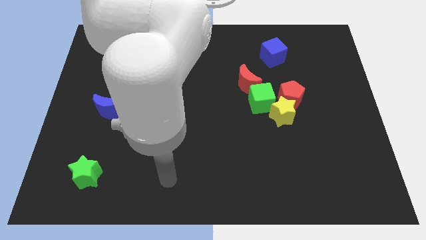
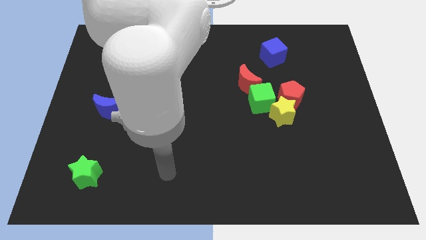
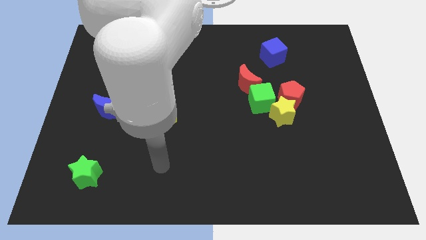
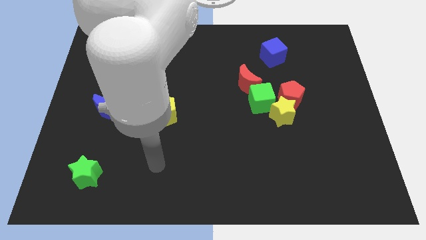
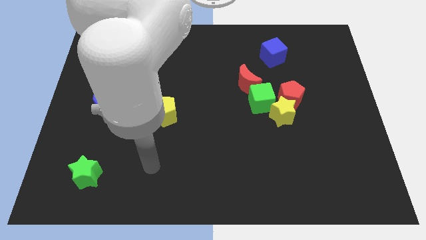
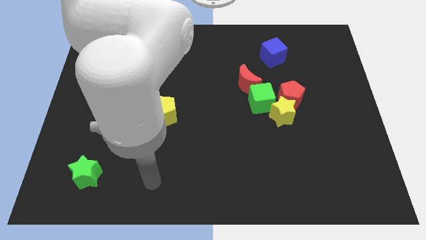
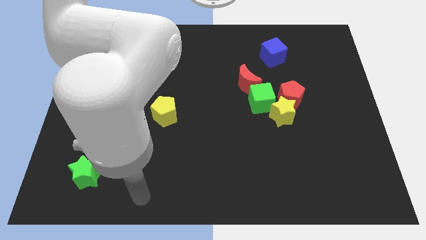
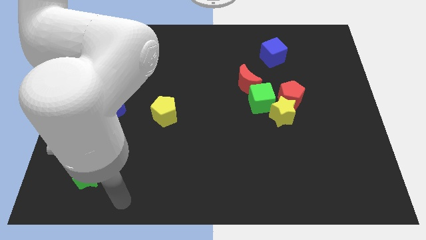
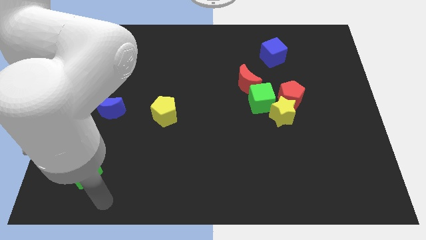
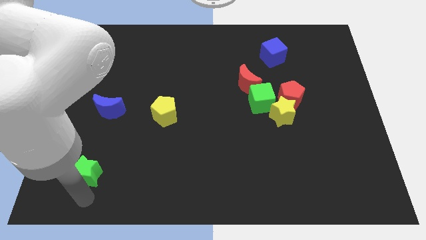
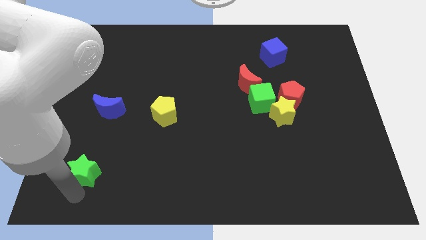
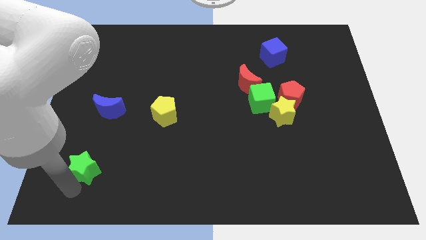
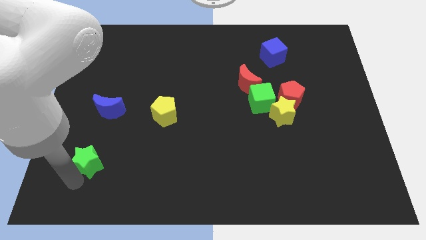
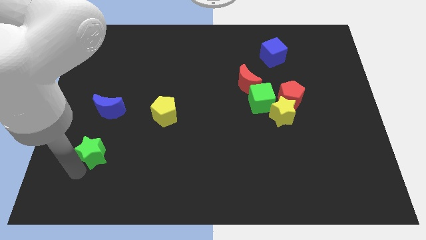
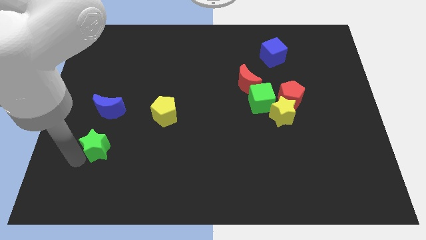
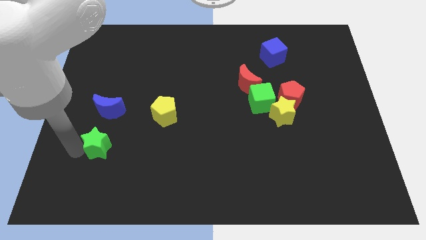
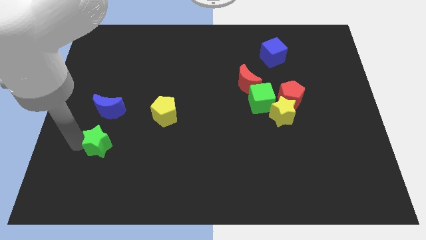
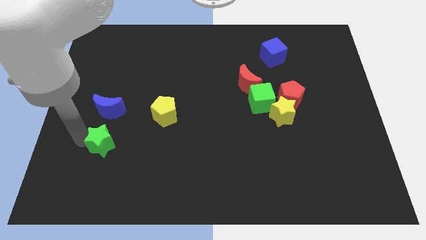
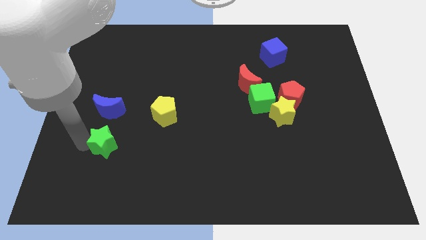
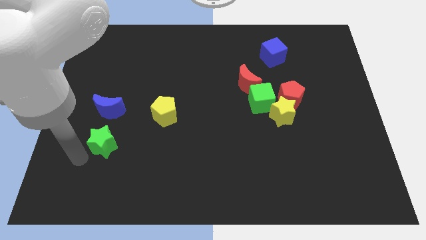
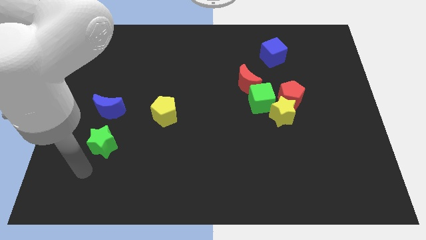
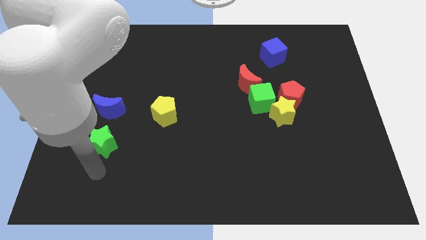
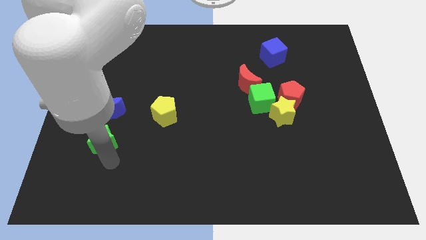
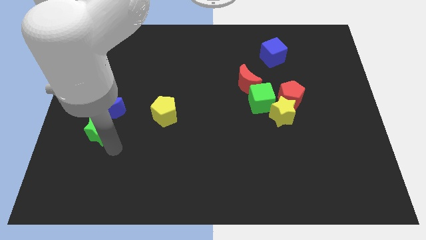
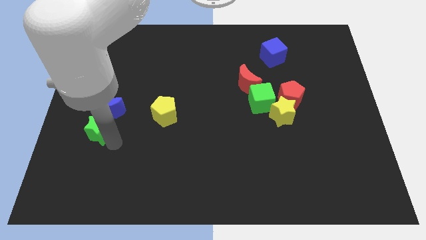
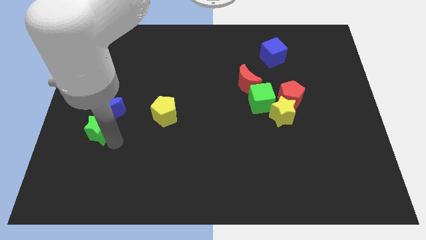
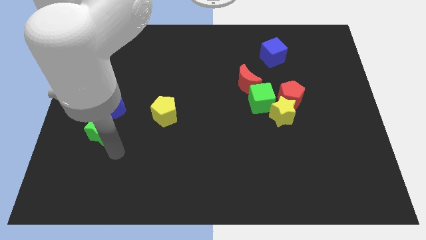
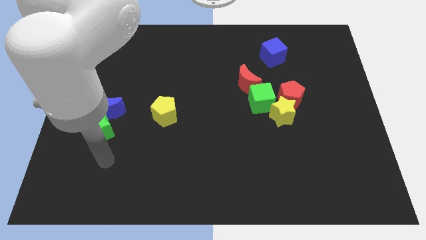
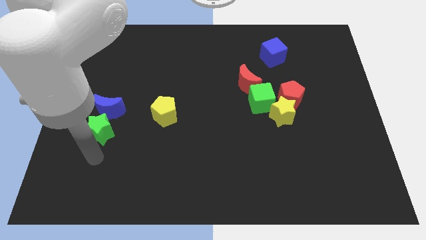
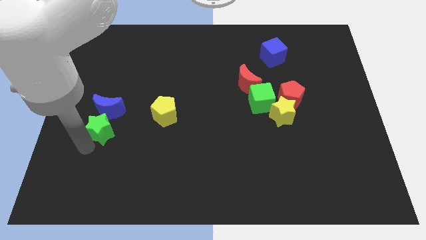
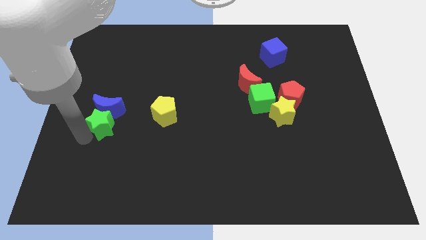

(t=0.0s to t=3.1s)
slide green star into blue moon

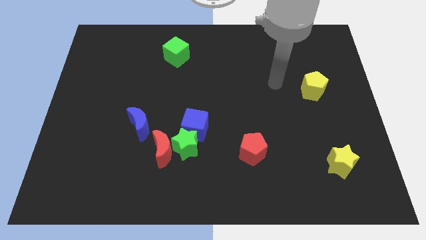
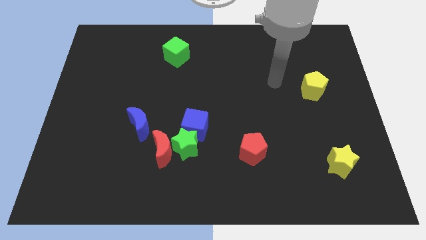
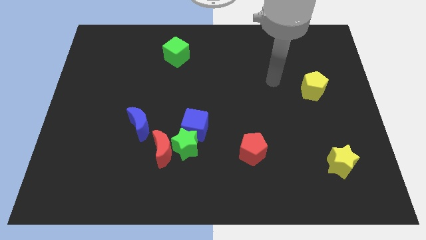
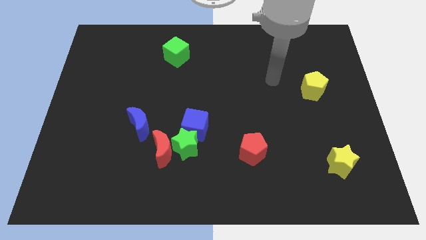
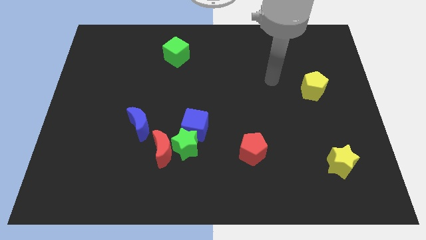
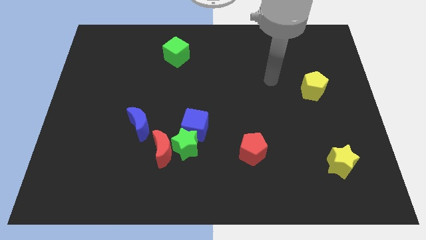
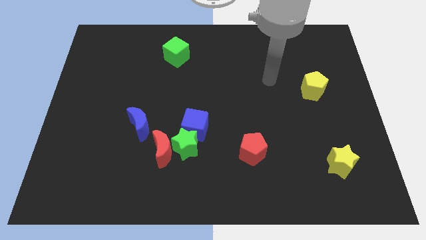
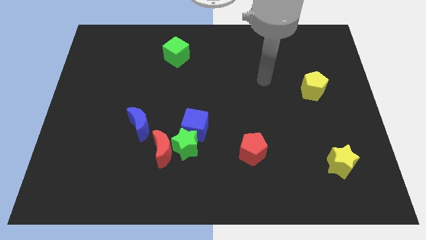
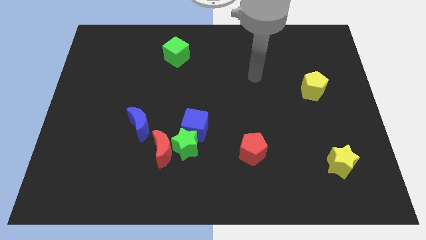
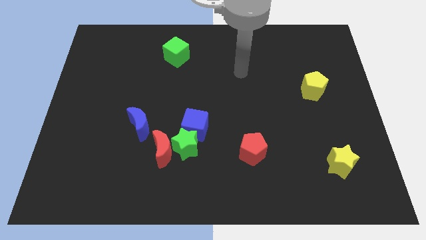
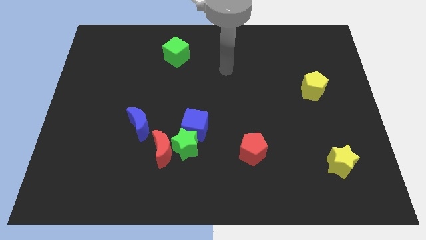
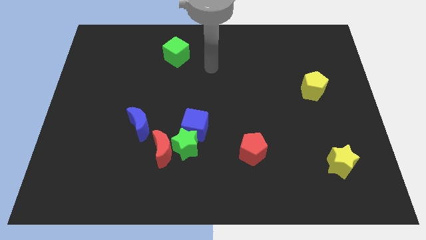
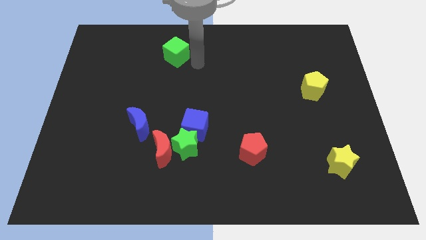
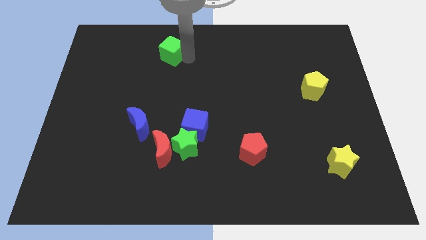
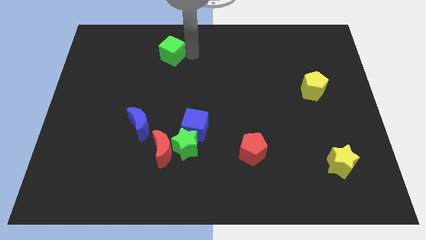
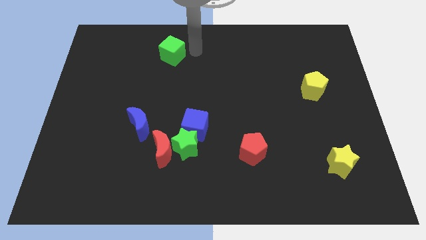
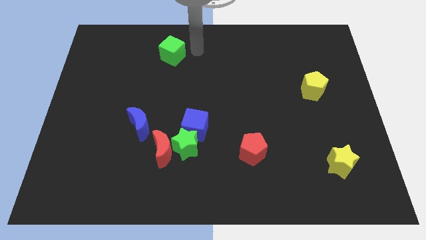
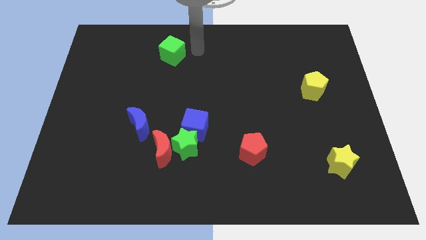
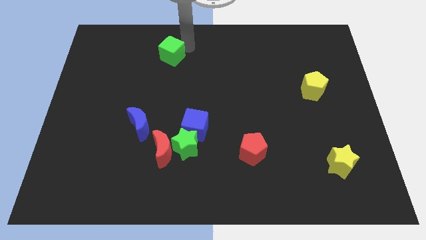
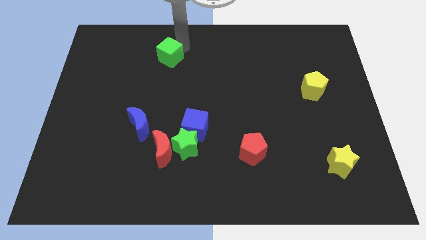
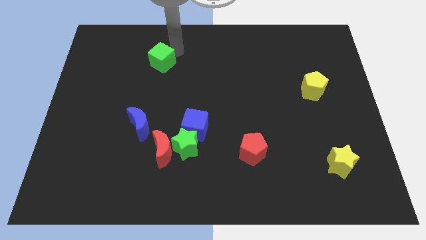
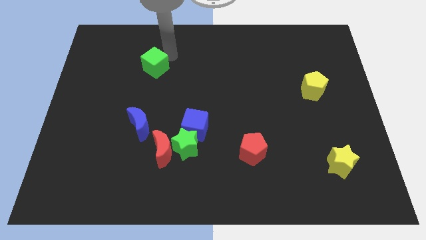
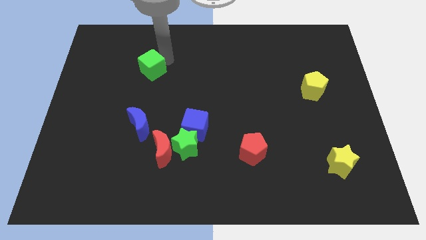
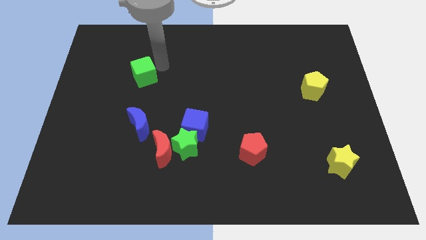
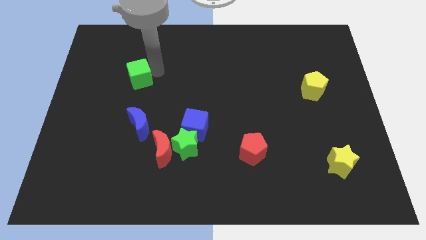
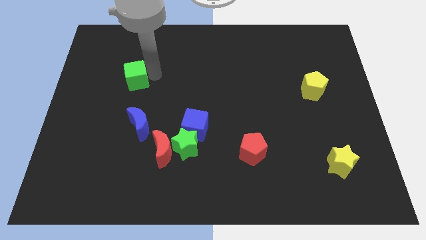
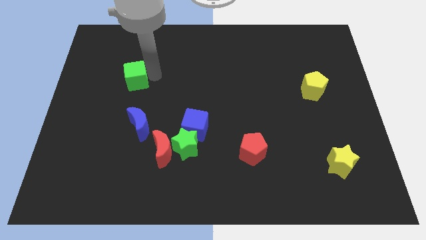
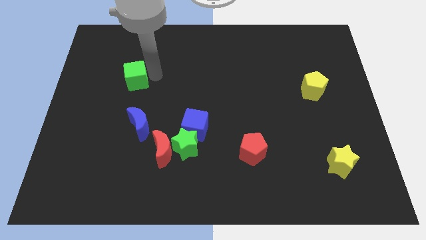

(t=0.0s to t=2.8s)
move the green cube towards the center left

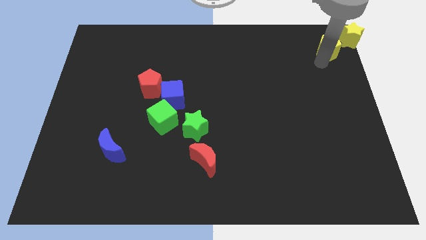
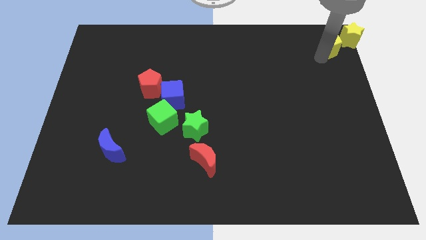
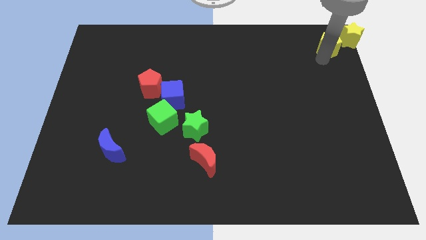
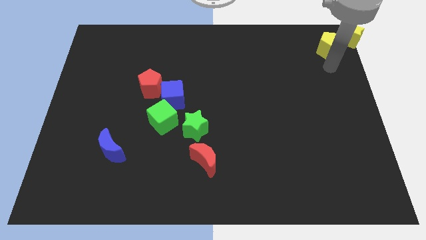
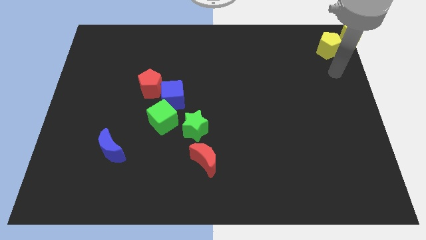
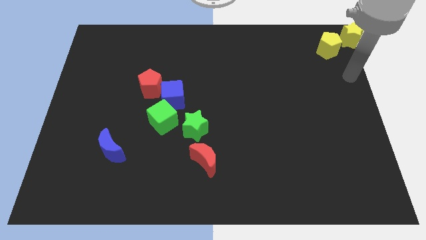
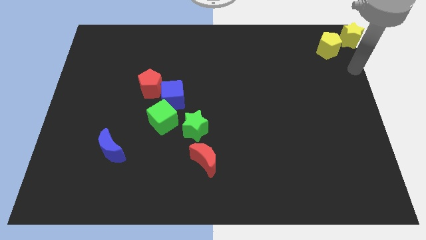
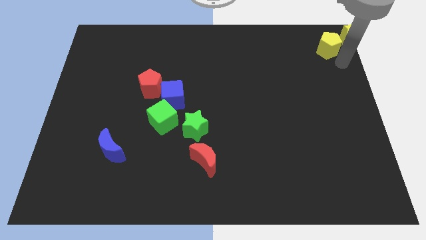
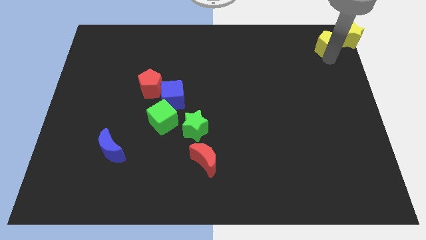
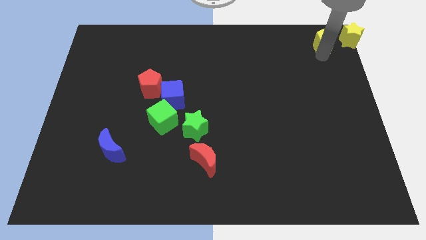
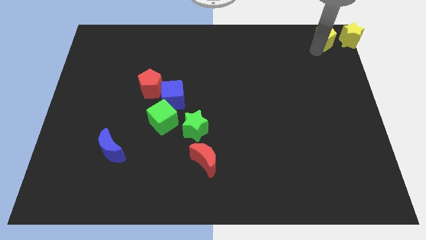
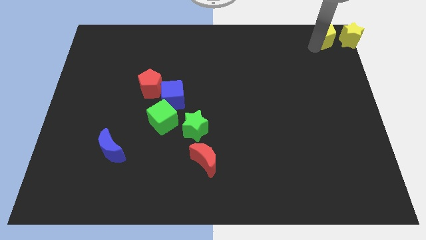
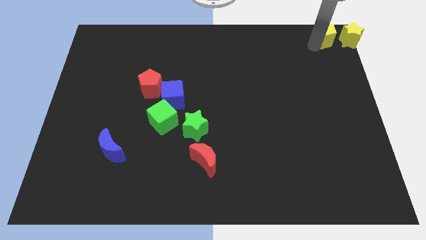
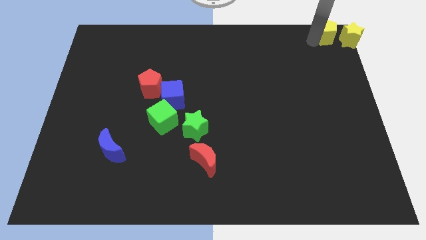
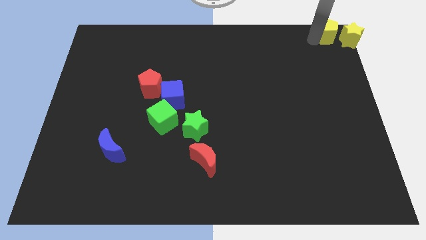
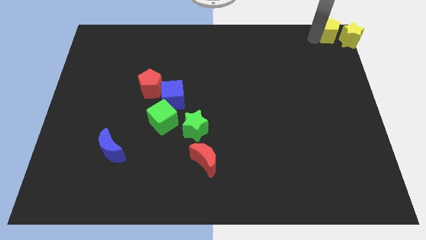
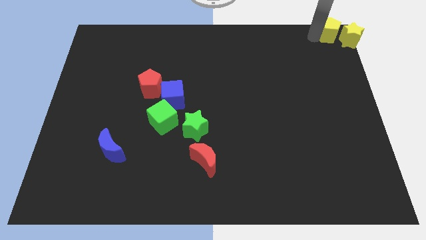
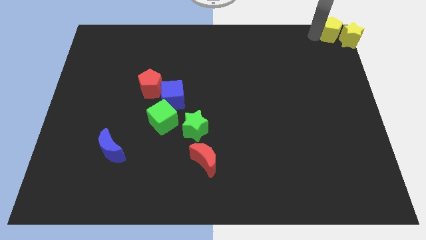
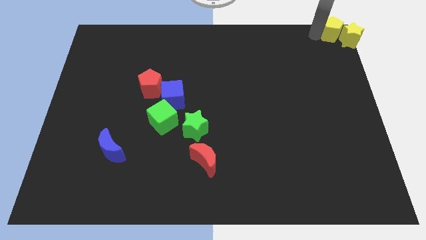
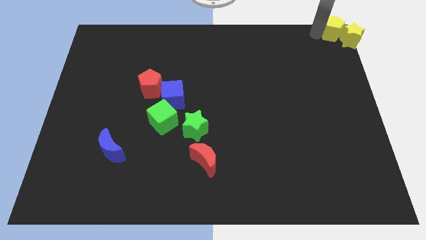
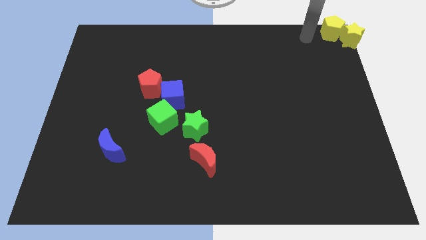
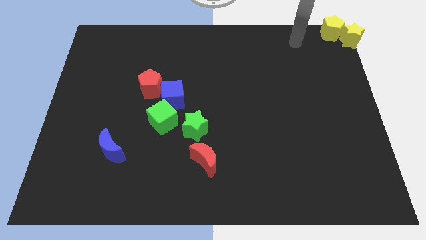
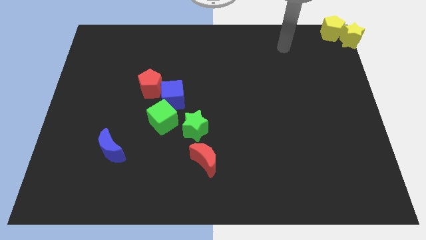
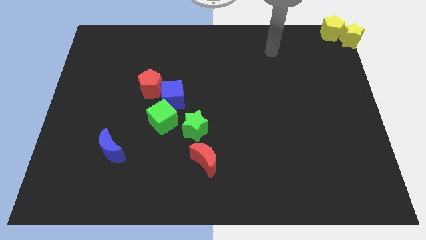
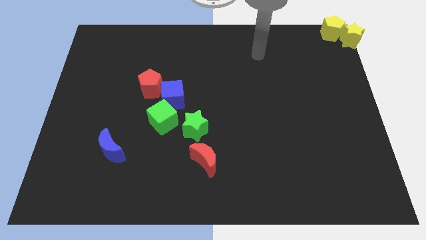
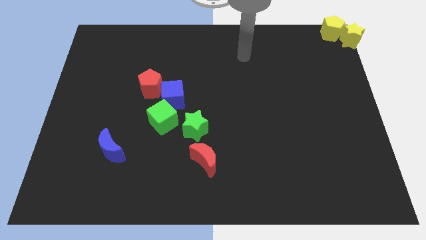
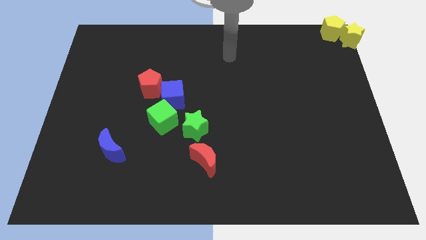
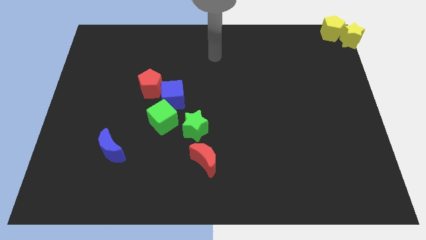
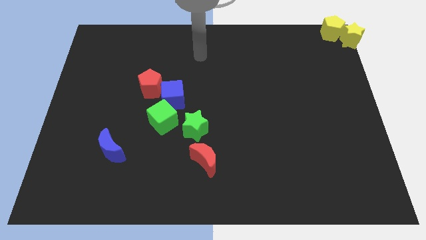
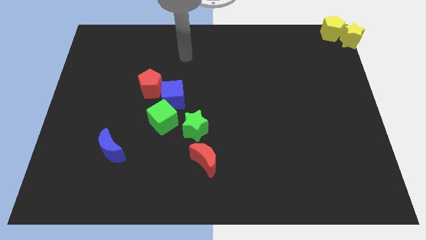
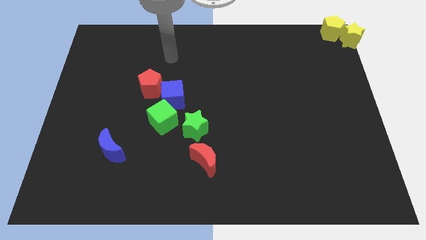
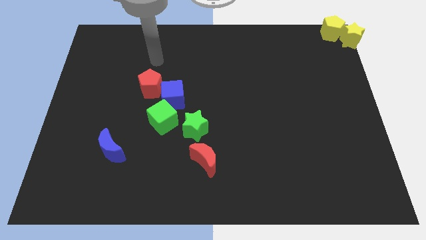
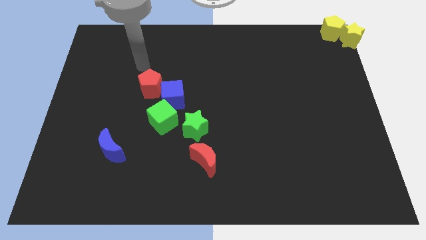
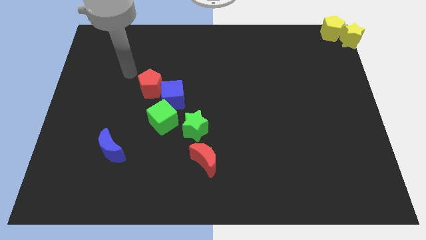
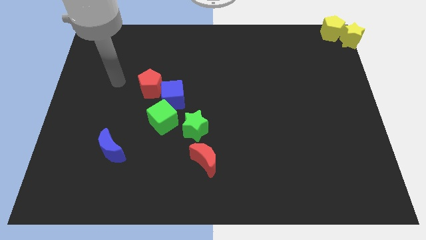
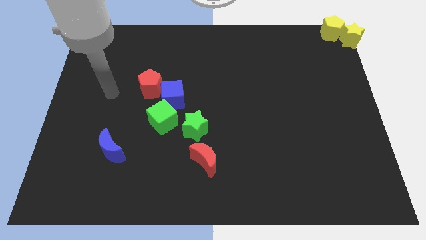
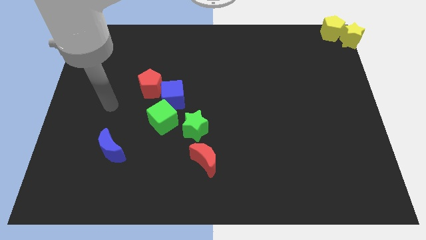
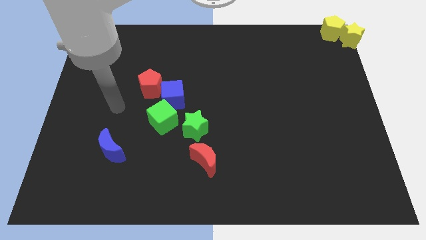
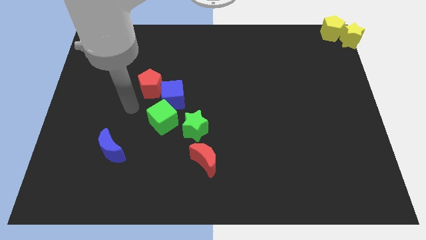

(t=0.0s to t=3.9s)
place the yellow pentagon left to the yellow star
